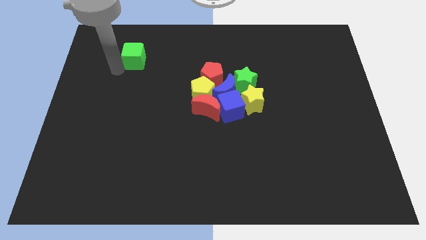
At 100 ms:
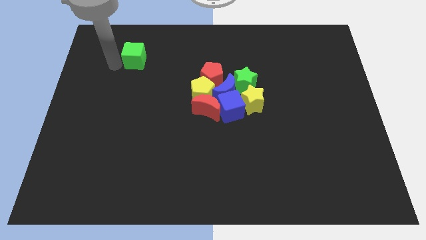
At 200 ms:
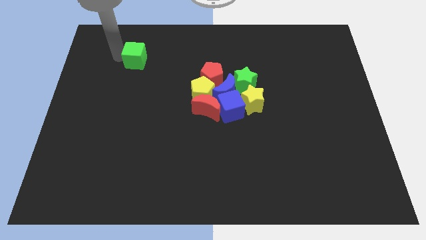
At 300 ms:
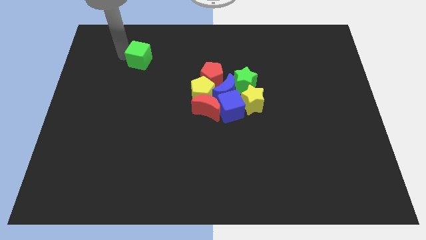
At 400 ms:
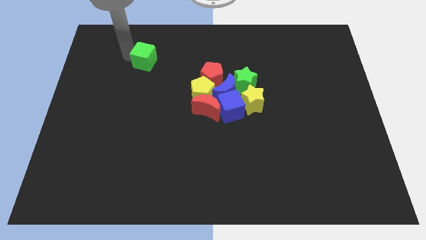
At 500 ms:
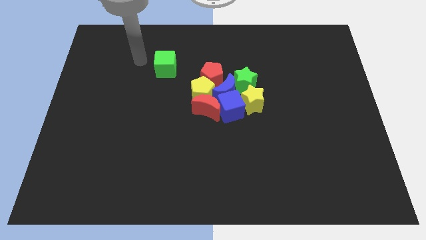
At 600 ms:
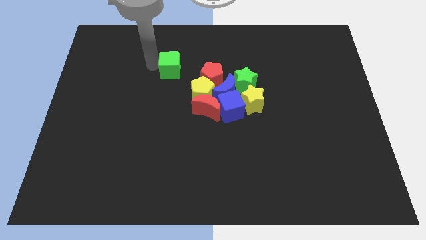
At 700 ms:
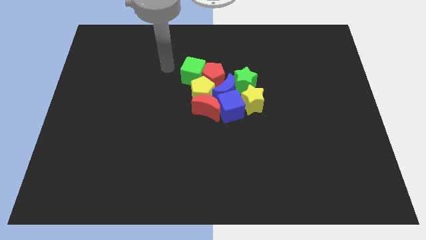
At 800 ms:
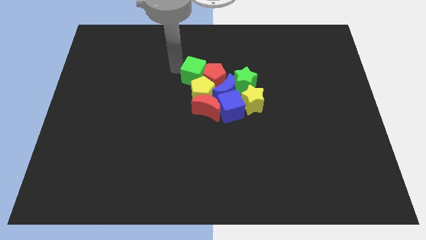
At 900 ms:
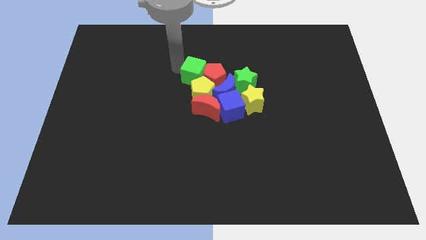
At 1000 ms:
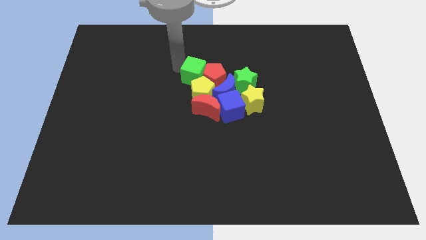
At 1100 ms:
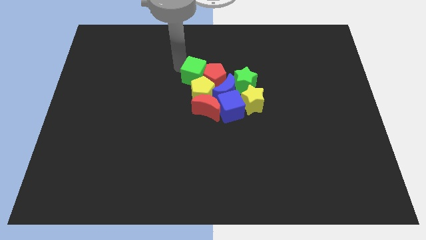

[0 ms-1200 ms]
push the green cube to the group of blocks

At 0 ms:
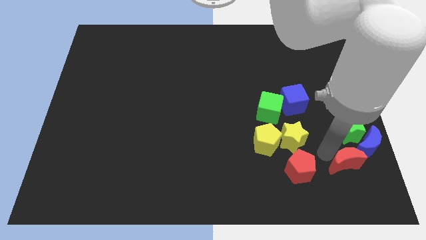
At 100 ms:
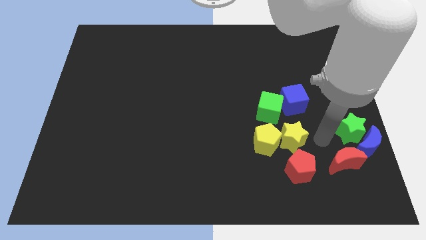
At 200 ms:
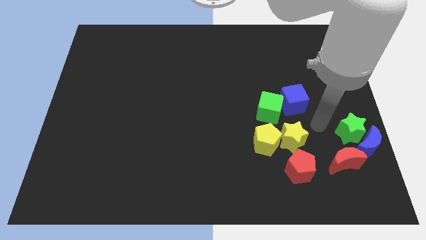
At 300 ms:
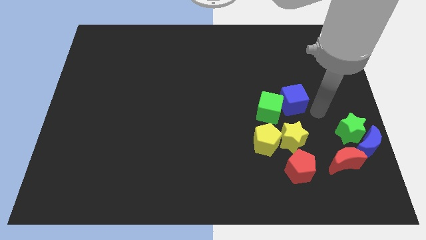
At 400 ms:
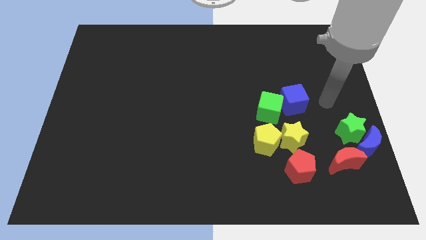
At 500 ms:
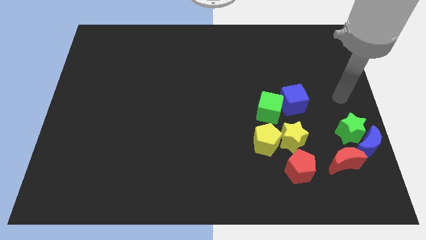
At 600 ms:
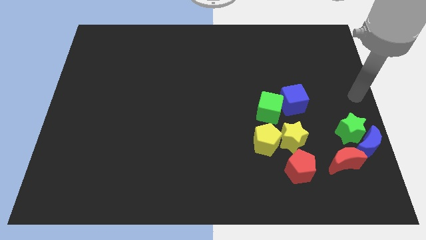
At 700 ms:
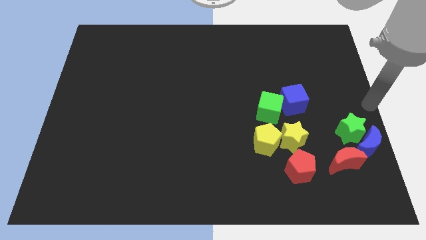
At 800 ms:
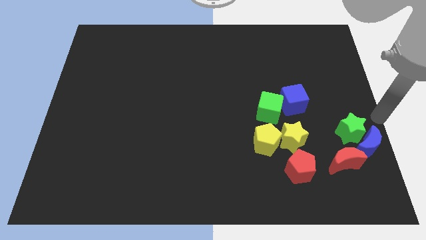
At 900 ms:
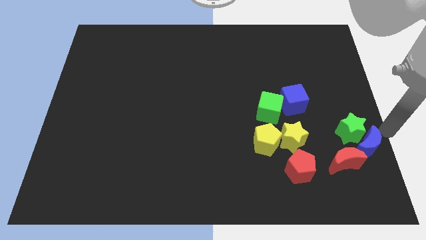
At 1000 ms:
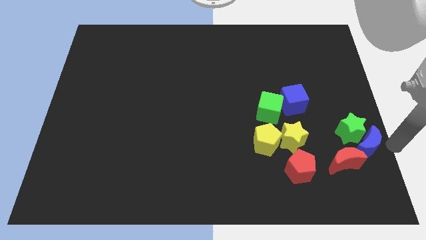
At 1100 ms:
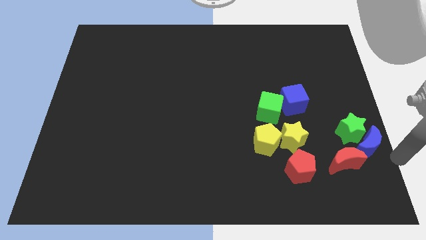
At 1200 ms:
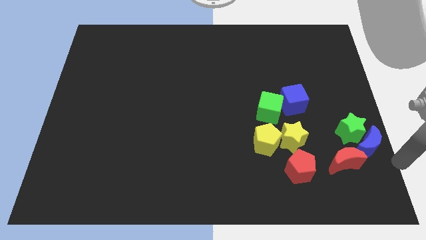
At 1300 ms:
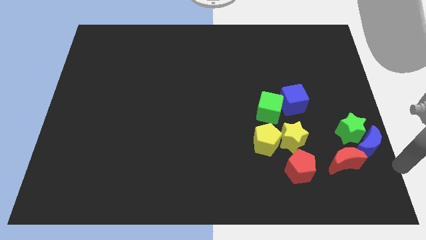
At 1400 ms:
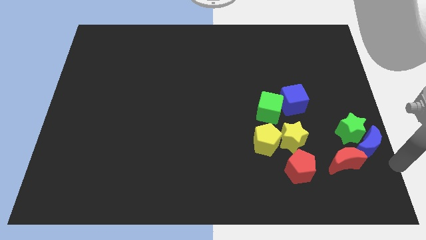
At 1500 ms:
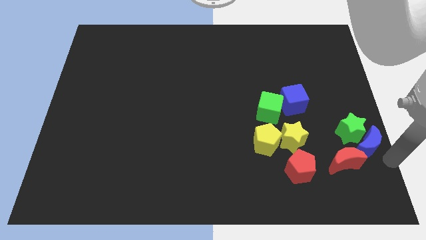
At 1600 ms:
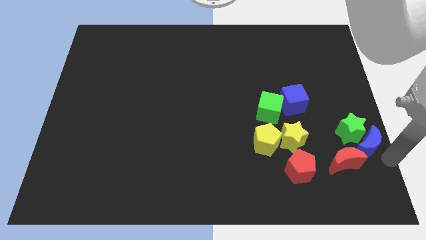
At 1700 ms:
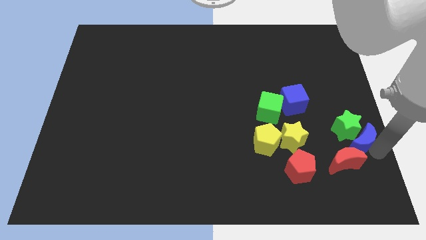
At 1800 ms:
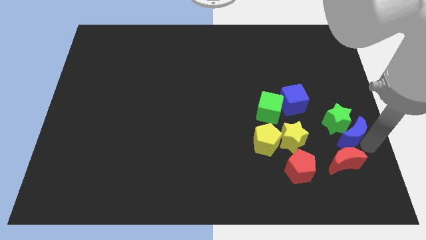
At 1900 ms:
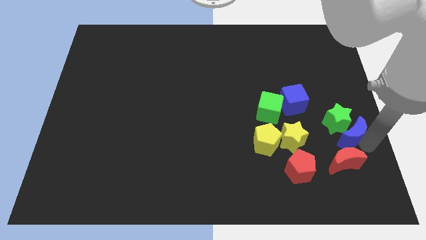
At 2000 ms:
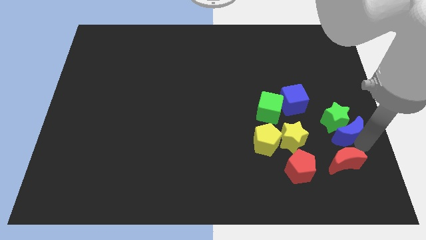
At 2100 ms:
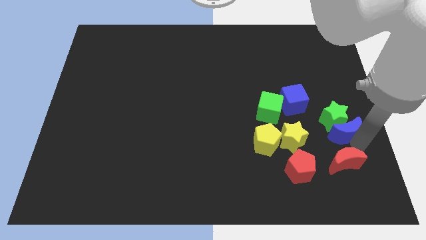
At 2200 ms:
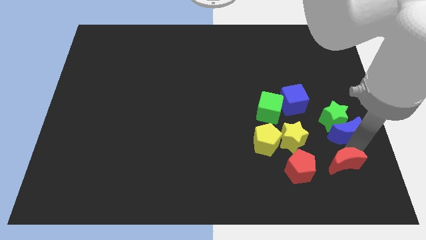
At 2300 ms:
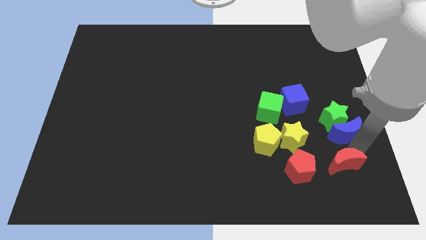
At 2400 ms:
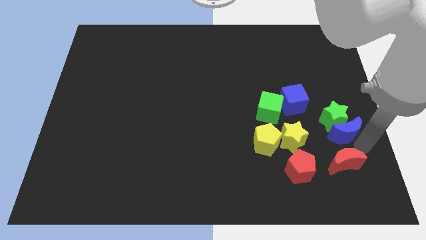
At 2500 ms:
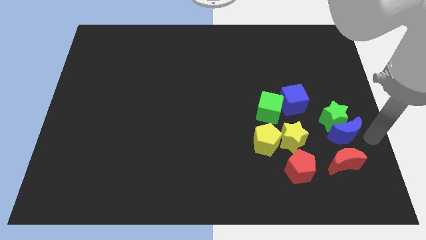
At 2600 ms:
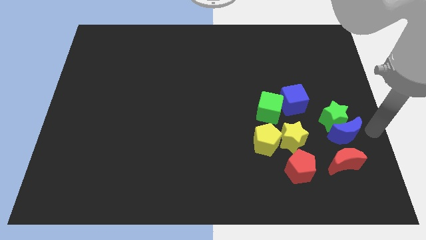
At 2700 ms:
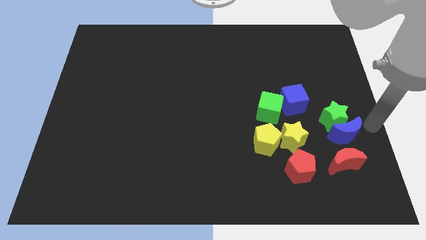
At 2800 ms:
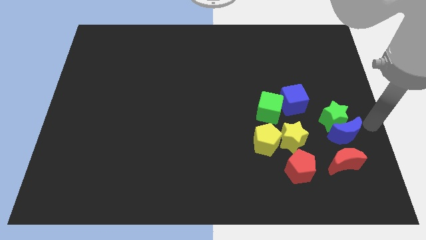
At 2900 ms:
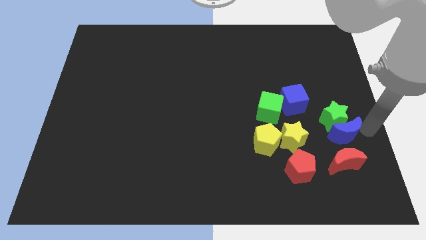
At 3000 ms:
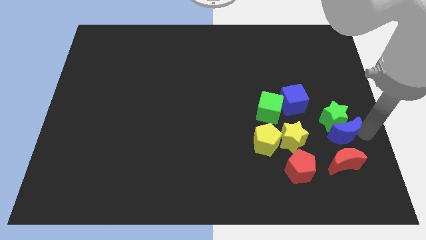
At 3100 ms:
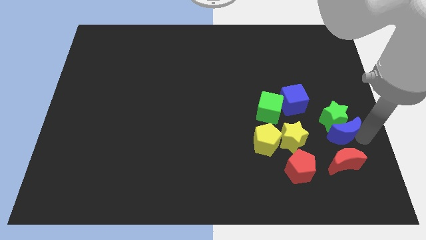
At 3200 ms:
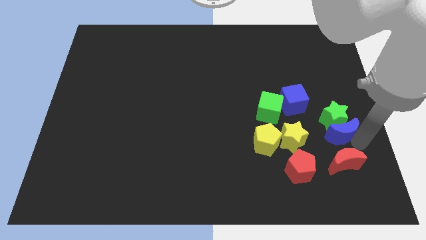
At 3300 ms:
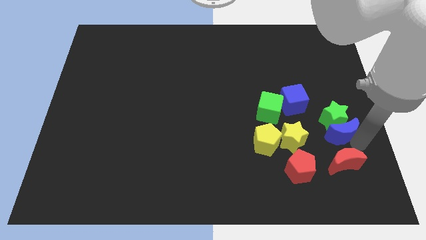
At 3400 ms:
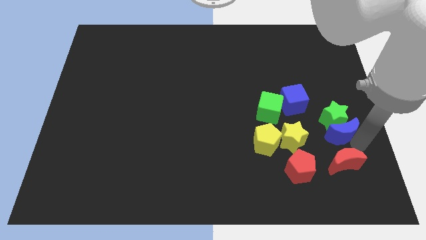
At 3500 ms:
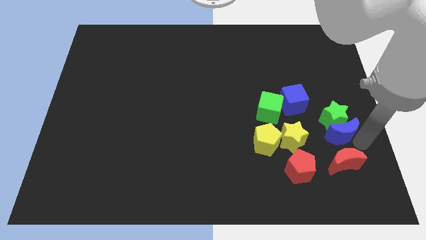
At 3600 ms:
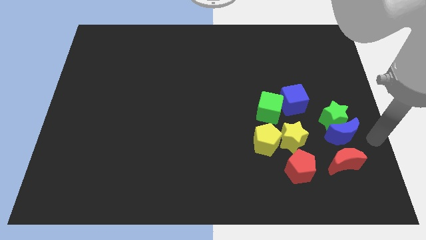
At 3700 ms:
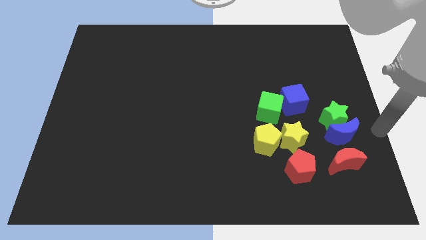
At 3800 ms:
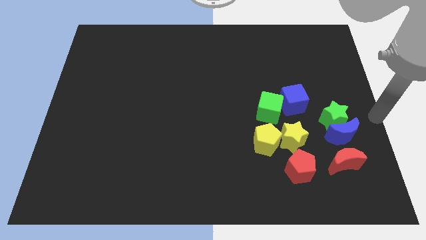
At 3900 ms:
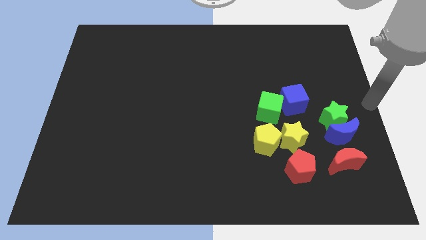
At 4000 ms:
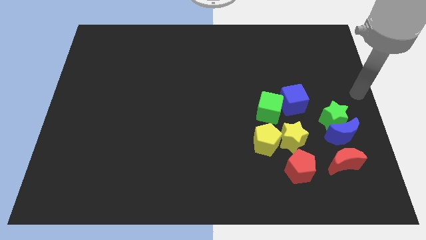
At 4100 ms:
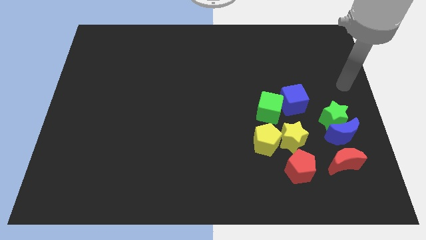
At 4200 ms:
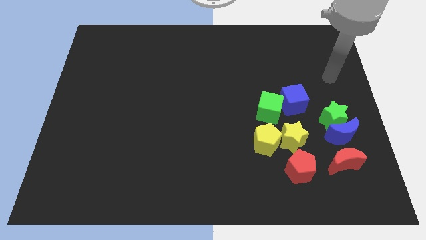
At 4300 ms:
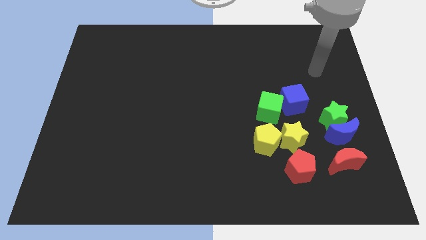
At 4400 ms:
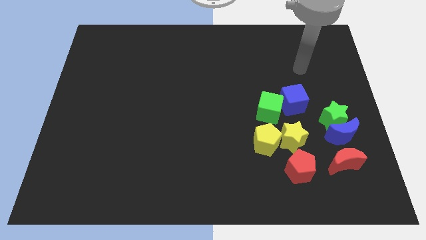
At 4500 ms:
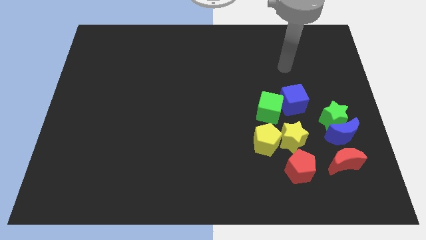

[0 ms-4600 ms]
move blue moon towards green star

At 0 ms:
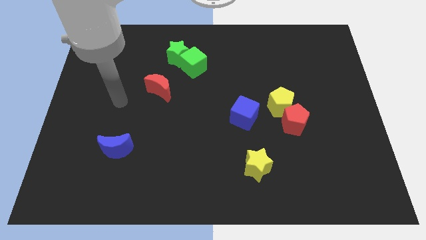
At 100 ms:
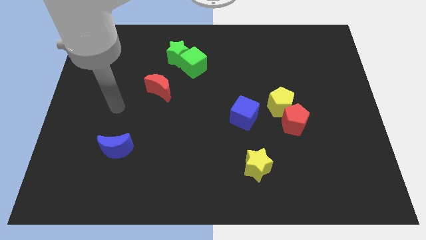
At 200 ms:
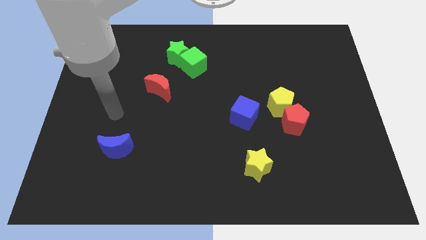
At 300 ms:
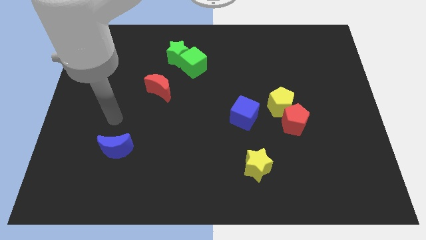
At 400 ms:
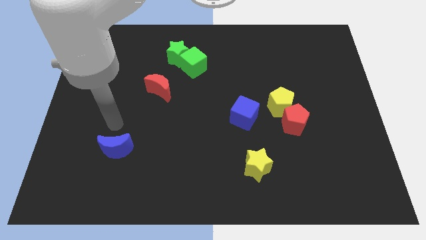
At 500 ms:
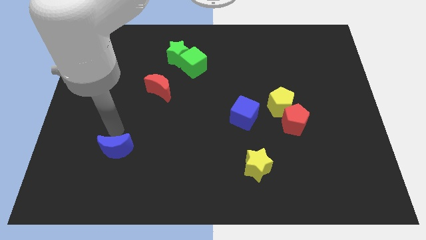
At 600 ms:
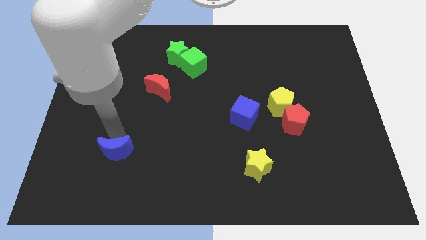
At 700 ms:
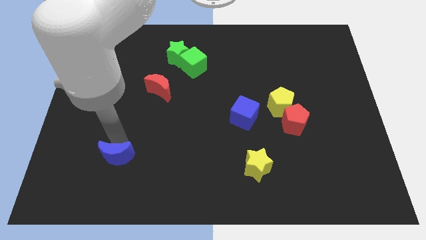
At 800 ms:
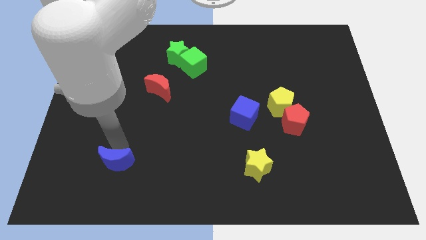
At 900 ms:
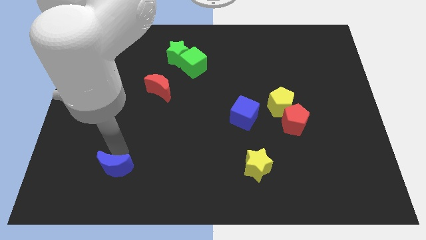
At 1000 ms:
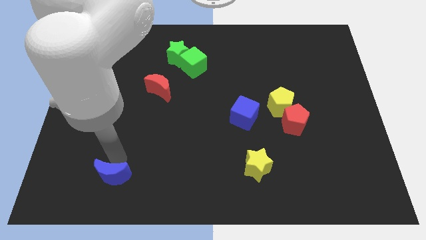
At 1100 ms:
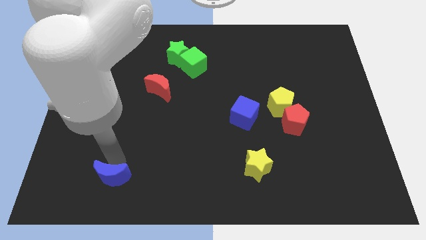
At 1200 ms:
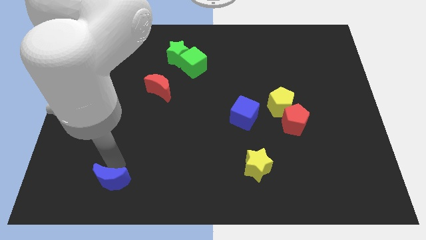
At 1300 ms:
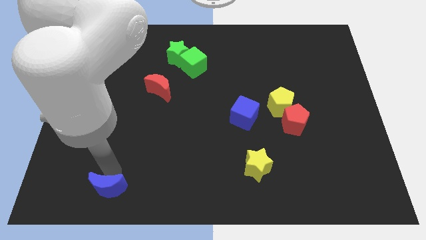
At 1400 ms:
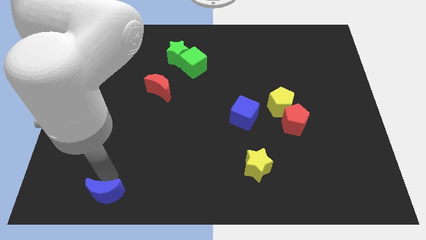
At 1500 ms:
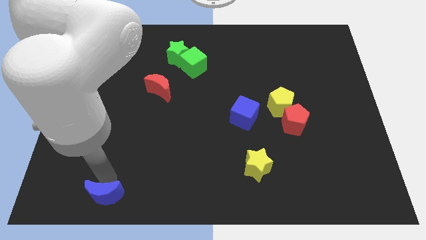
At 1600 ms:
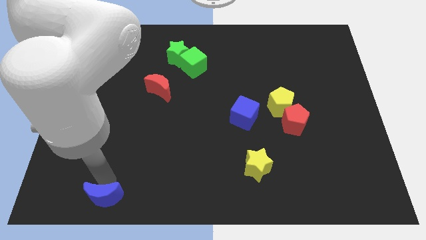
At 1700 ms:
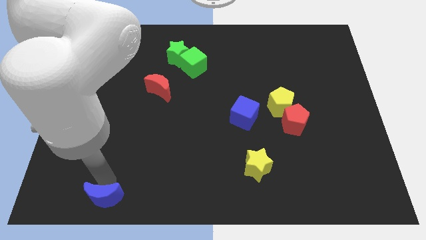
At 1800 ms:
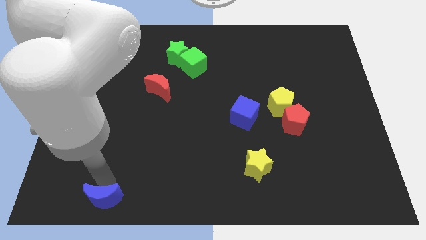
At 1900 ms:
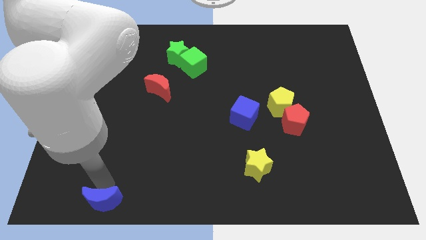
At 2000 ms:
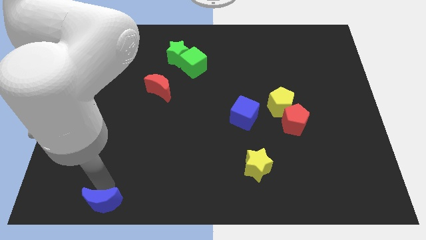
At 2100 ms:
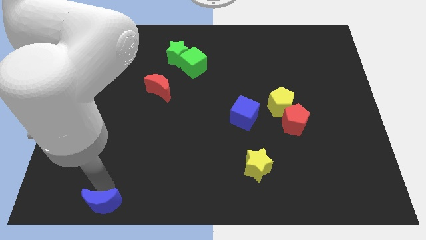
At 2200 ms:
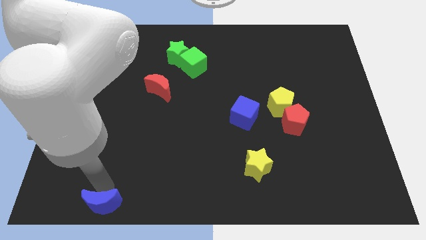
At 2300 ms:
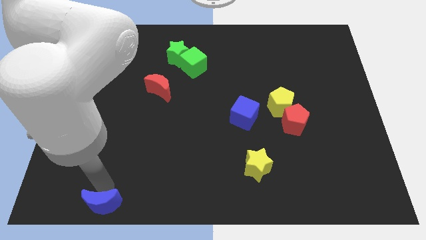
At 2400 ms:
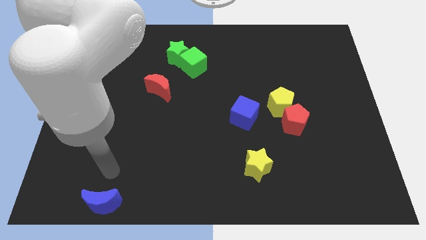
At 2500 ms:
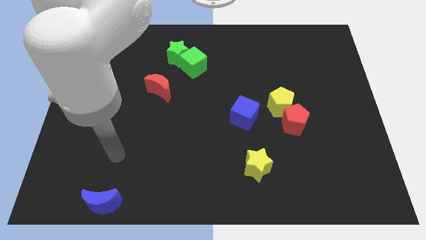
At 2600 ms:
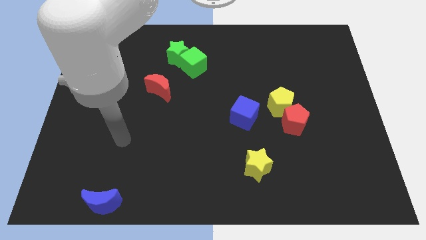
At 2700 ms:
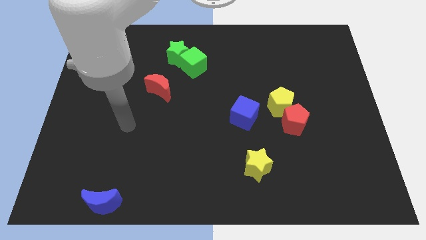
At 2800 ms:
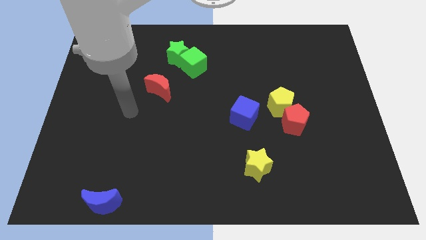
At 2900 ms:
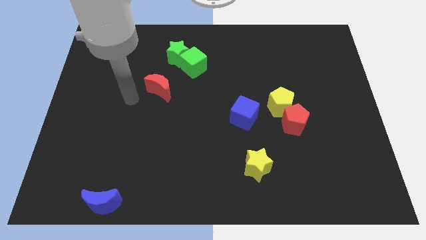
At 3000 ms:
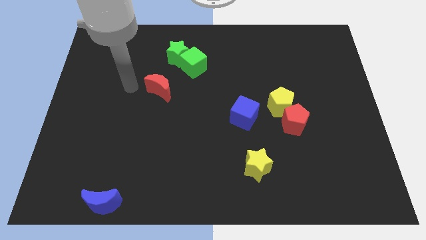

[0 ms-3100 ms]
push the blue crescent to the bottom
